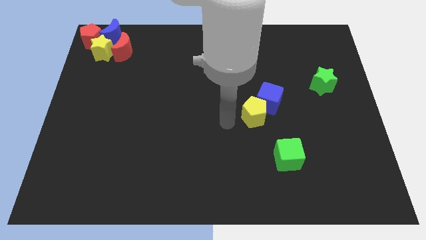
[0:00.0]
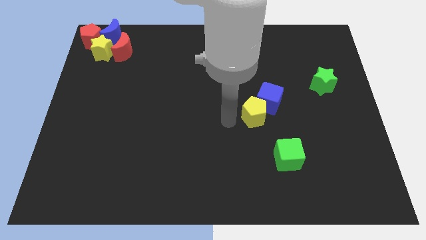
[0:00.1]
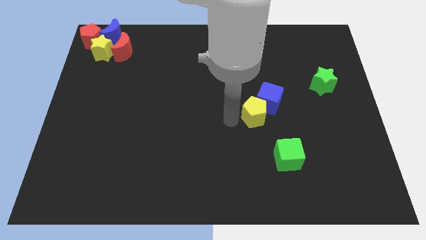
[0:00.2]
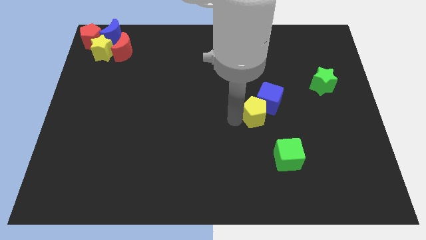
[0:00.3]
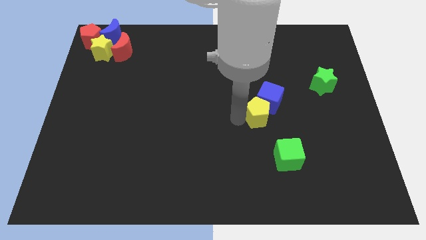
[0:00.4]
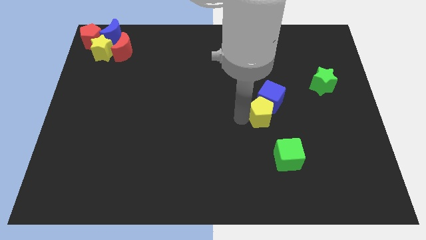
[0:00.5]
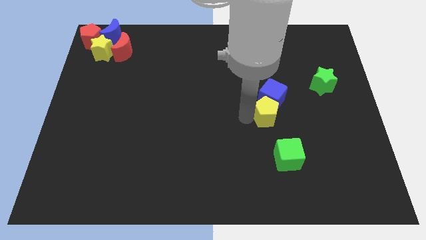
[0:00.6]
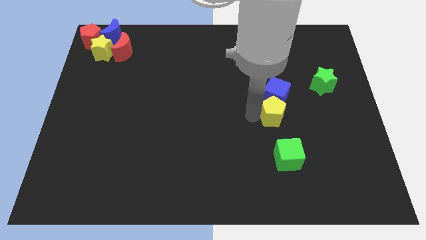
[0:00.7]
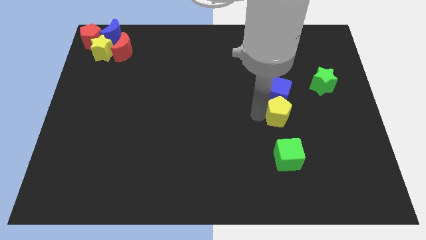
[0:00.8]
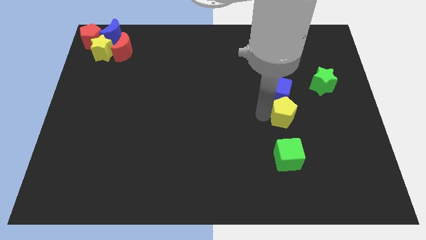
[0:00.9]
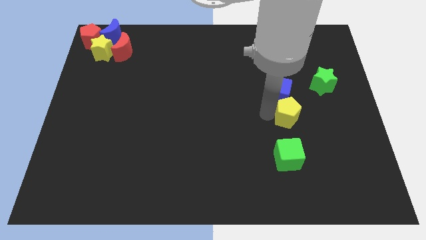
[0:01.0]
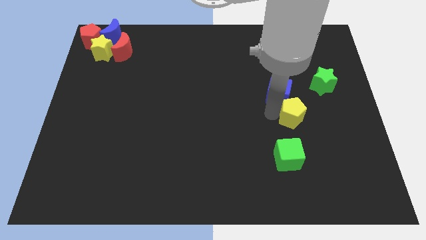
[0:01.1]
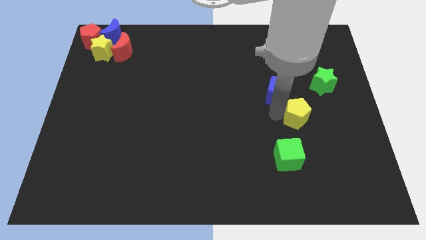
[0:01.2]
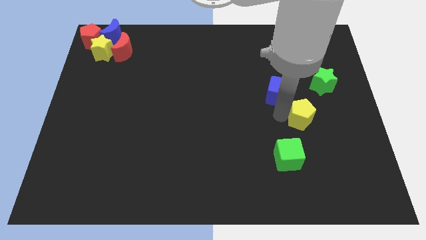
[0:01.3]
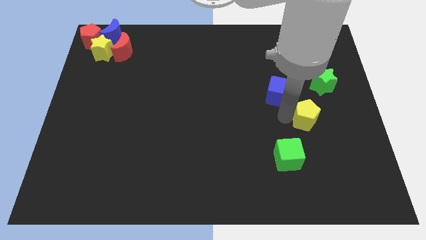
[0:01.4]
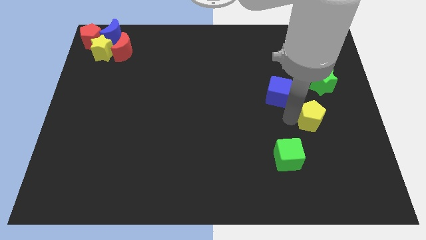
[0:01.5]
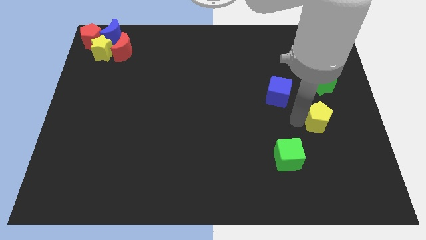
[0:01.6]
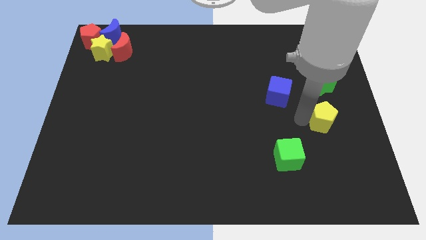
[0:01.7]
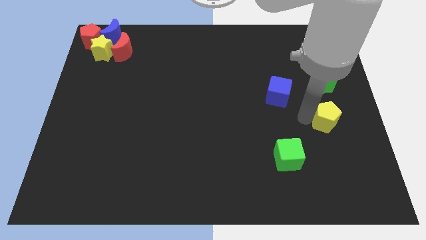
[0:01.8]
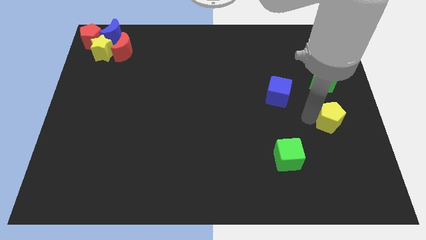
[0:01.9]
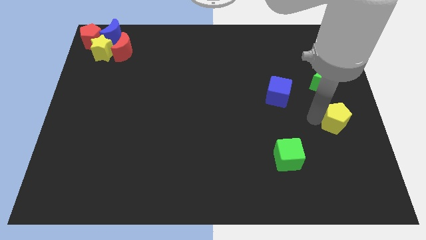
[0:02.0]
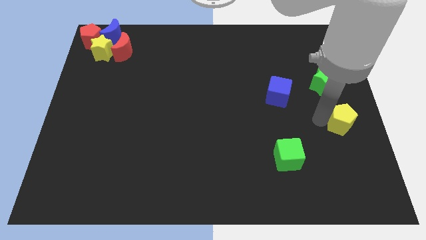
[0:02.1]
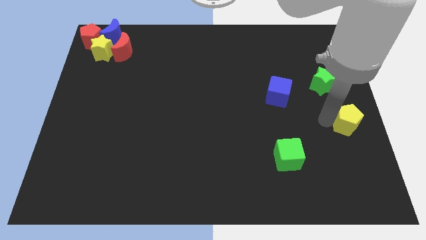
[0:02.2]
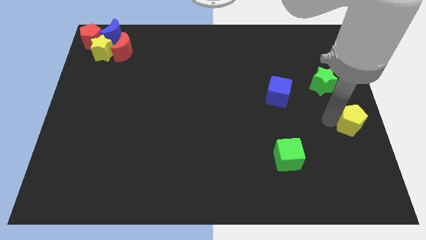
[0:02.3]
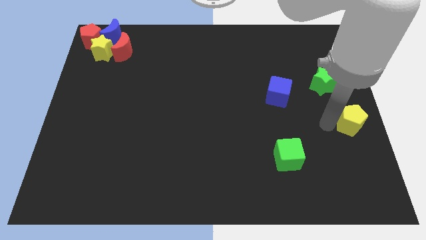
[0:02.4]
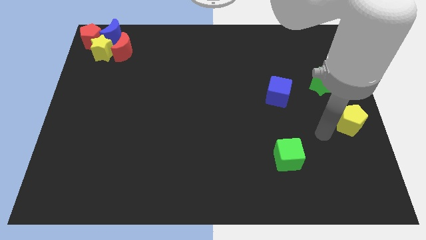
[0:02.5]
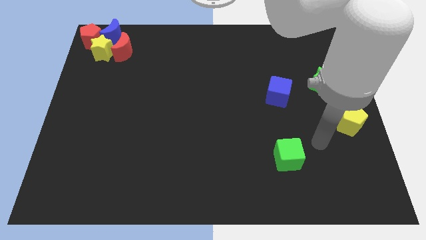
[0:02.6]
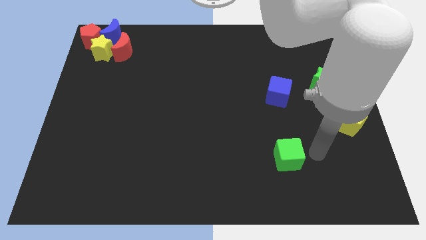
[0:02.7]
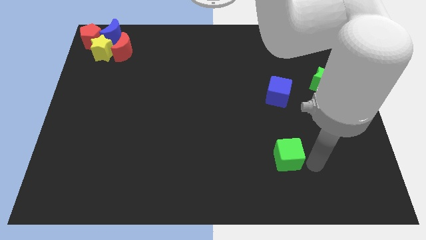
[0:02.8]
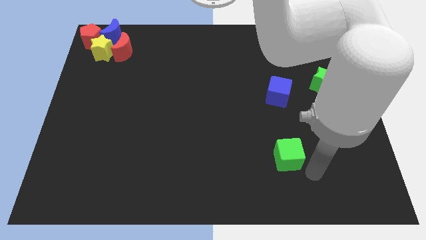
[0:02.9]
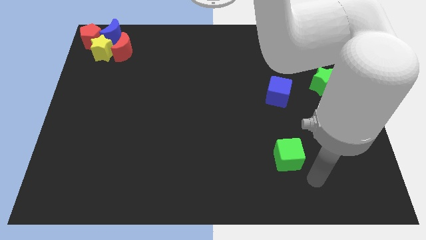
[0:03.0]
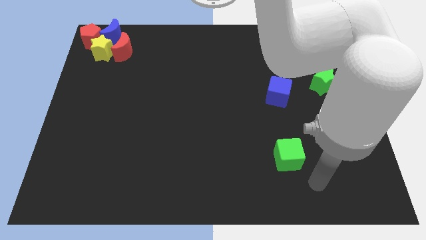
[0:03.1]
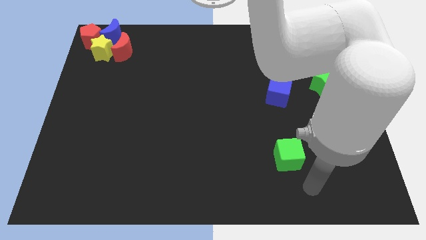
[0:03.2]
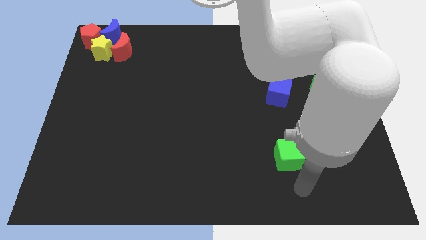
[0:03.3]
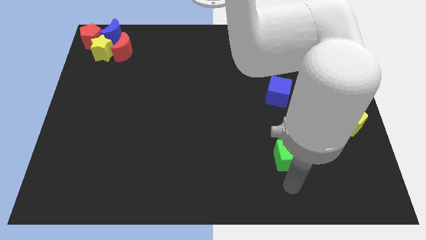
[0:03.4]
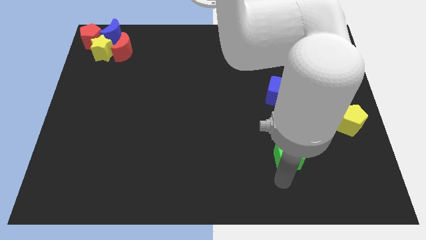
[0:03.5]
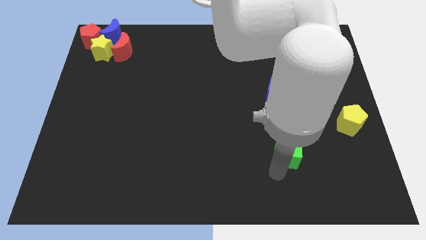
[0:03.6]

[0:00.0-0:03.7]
place yellow pentagon to the right center of the board

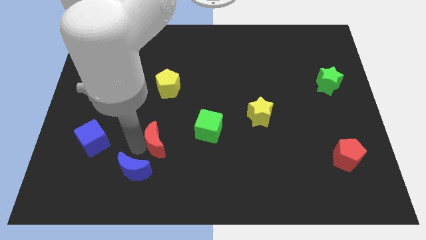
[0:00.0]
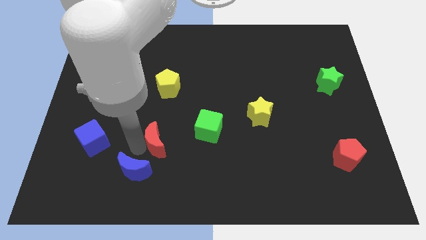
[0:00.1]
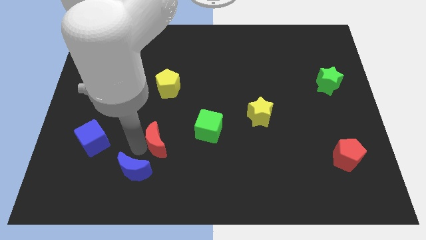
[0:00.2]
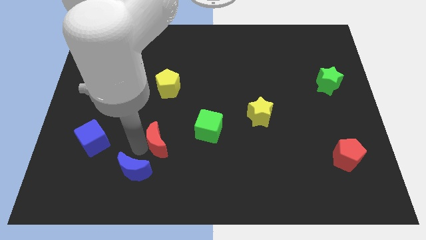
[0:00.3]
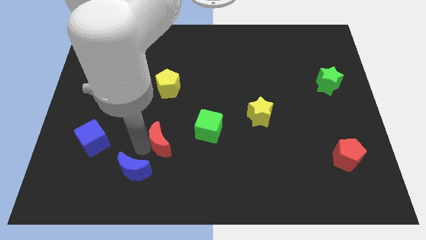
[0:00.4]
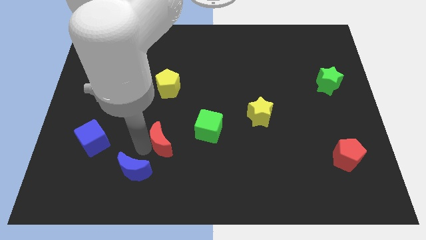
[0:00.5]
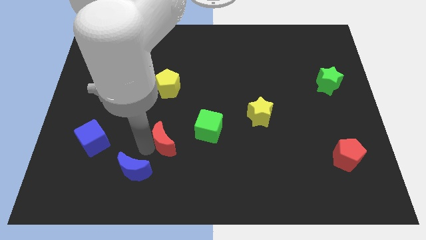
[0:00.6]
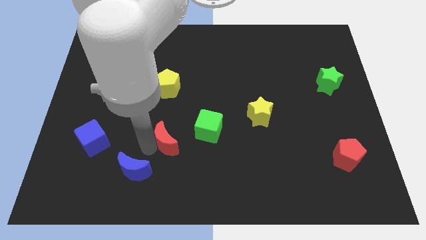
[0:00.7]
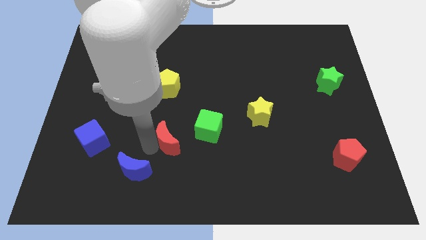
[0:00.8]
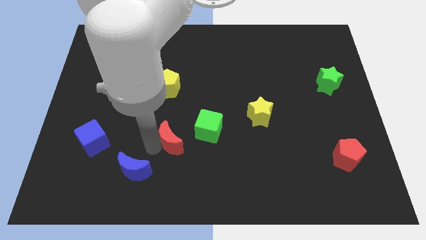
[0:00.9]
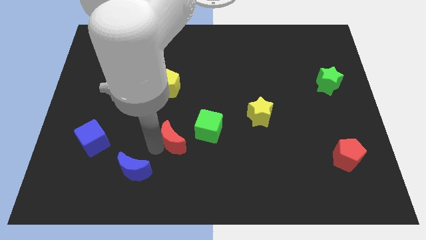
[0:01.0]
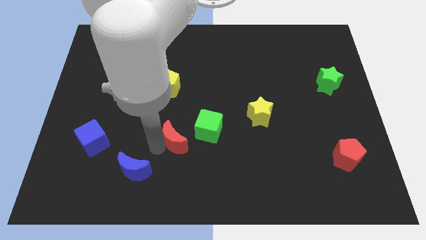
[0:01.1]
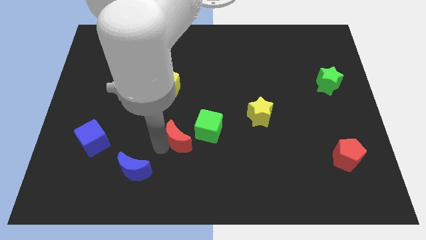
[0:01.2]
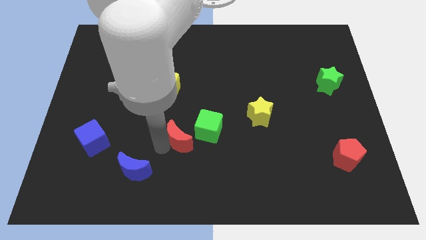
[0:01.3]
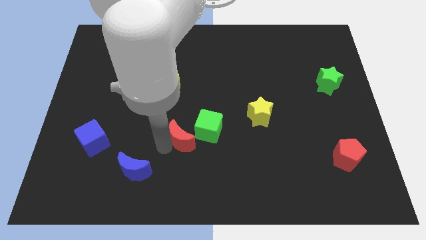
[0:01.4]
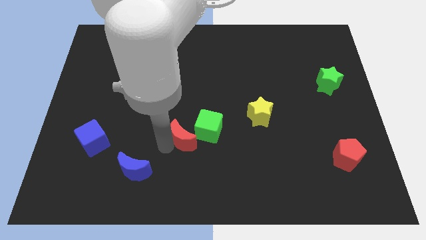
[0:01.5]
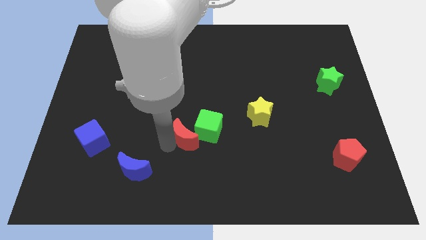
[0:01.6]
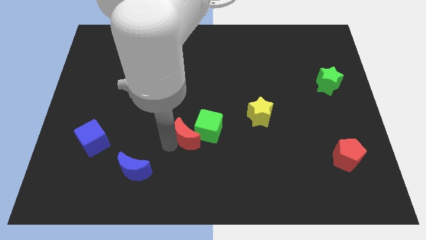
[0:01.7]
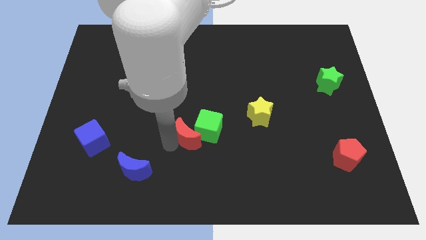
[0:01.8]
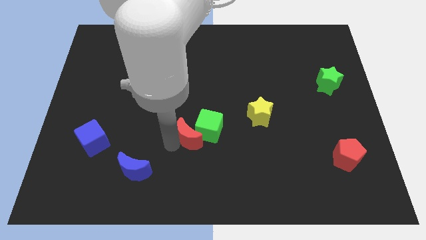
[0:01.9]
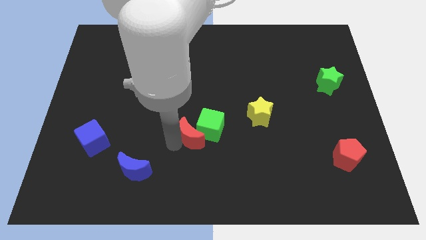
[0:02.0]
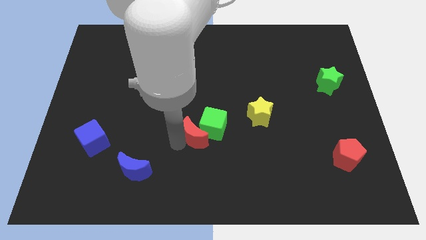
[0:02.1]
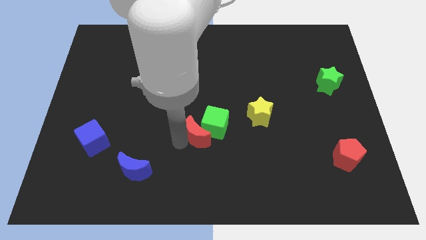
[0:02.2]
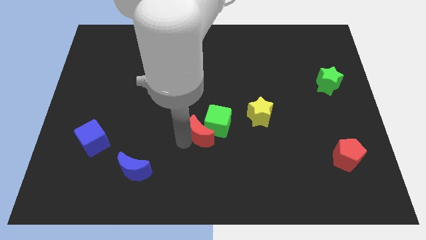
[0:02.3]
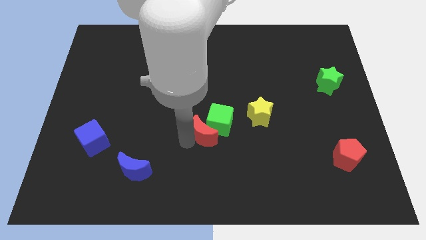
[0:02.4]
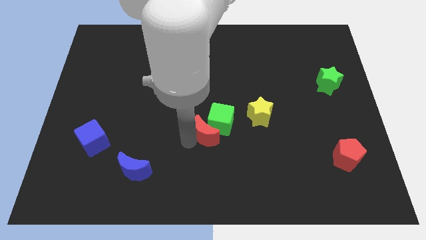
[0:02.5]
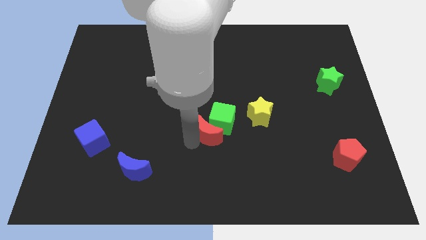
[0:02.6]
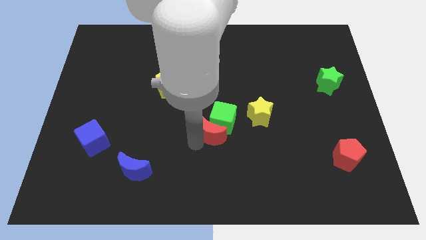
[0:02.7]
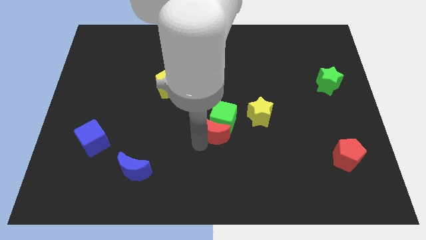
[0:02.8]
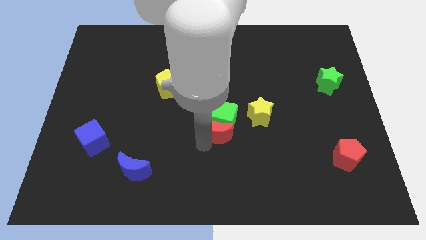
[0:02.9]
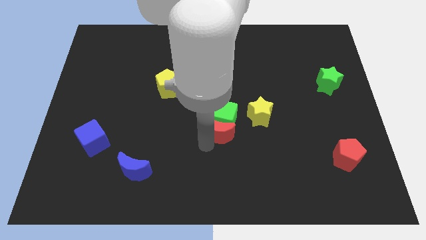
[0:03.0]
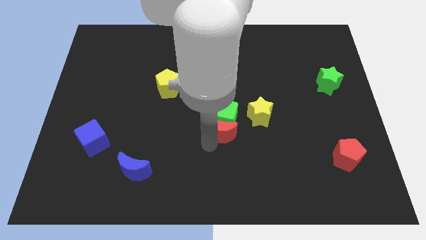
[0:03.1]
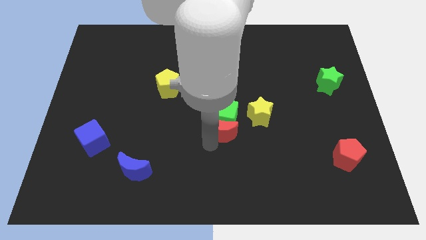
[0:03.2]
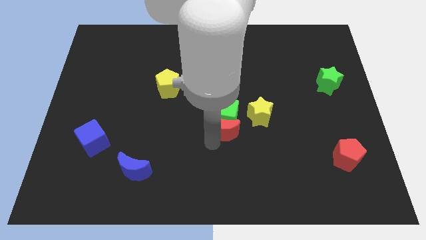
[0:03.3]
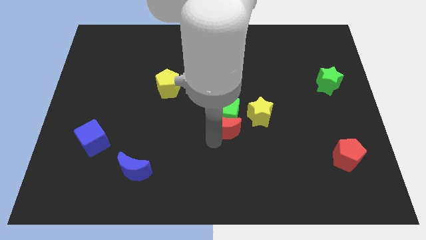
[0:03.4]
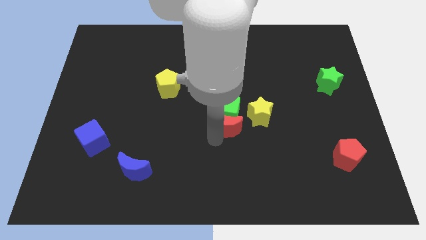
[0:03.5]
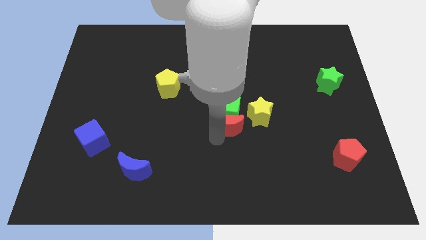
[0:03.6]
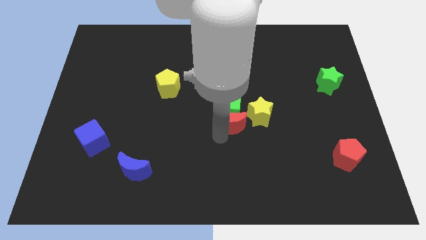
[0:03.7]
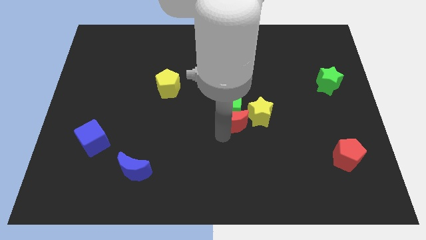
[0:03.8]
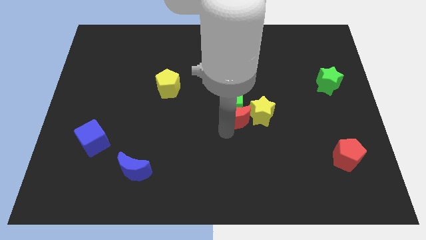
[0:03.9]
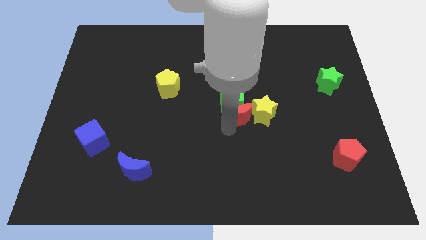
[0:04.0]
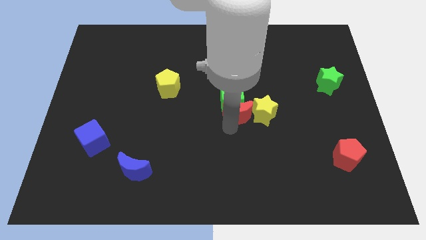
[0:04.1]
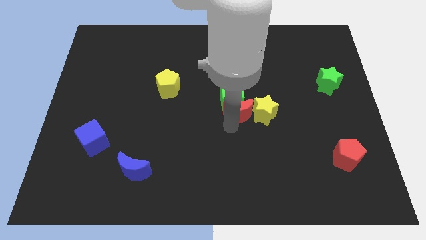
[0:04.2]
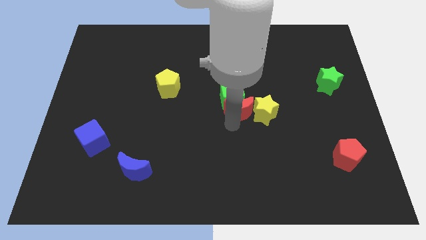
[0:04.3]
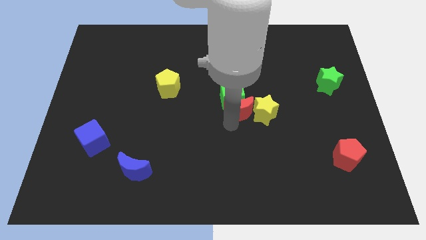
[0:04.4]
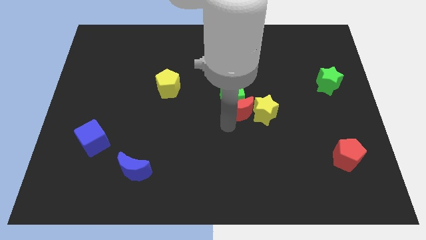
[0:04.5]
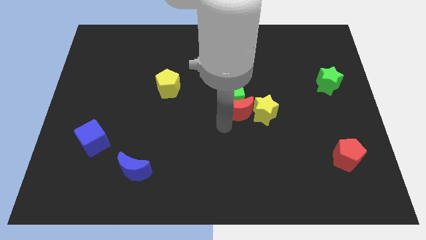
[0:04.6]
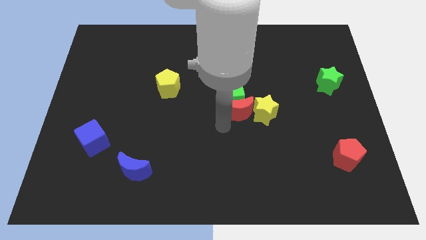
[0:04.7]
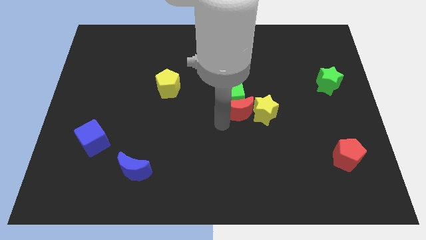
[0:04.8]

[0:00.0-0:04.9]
push the green cube and red moon towards the center

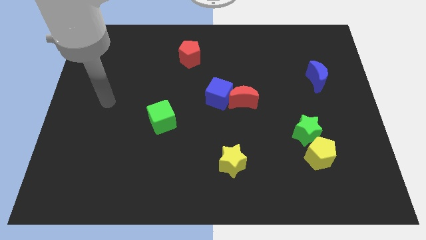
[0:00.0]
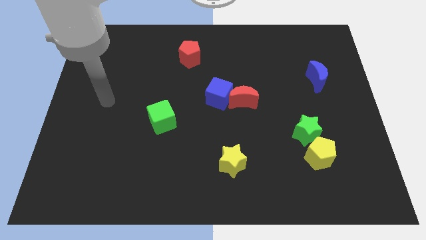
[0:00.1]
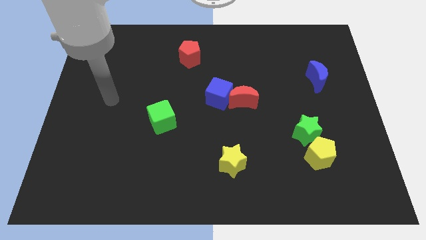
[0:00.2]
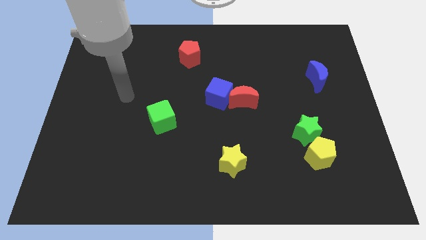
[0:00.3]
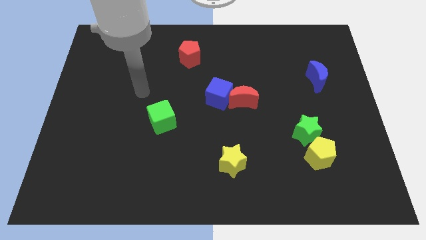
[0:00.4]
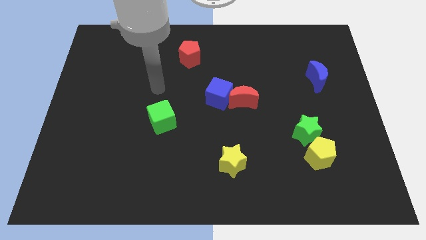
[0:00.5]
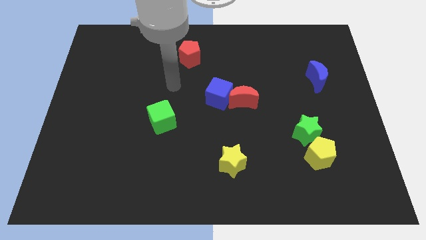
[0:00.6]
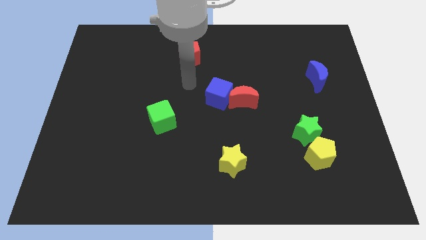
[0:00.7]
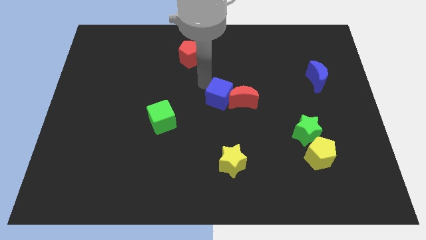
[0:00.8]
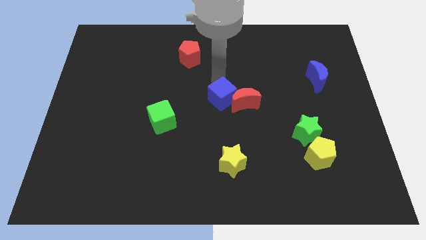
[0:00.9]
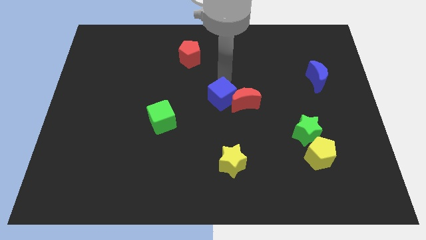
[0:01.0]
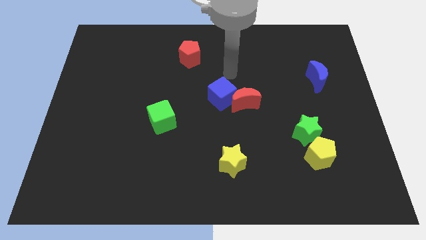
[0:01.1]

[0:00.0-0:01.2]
place your arm above the blue cube
